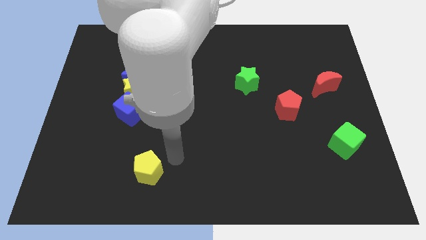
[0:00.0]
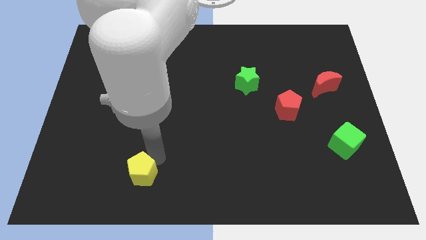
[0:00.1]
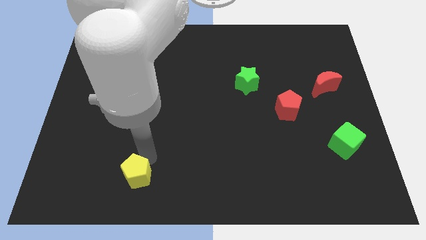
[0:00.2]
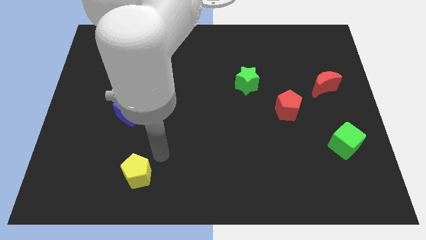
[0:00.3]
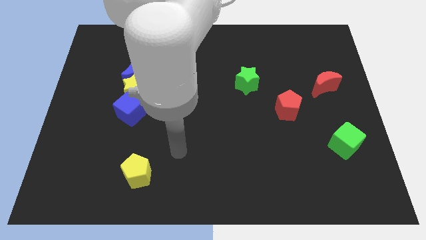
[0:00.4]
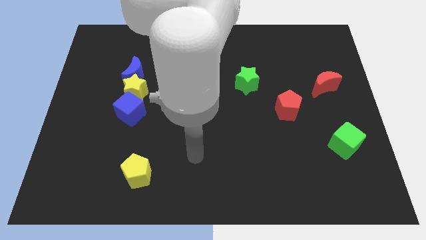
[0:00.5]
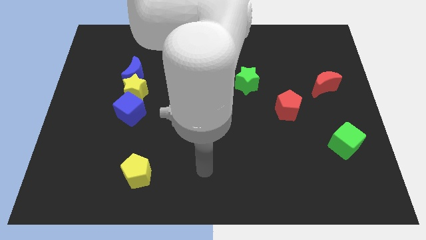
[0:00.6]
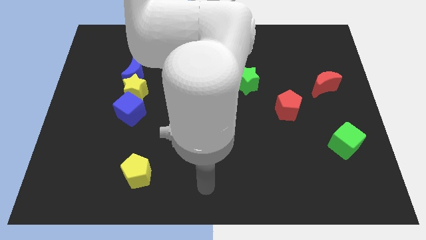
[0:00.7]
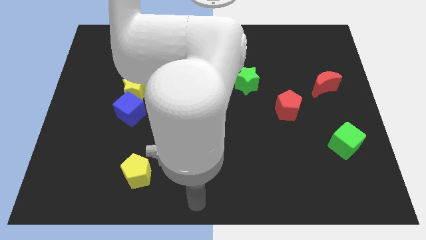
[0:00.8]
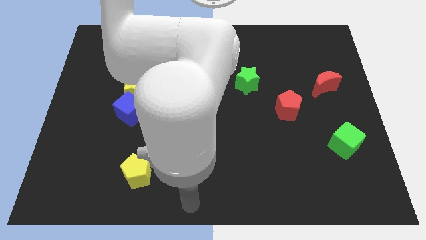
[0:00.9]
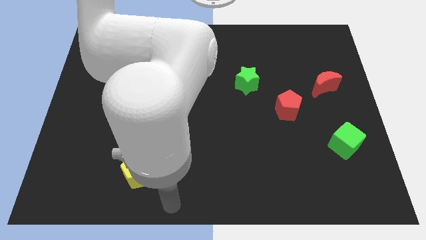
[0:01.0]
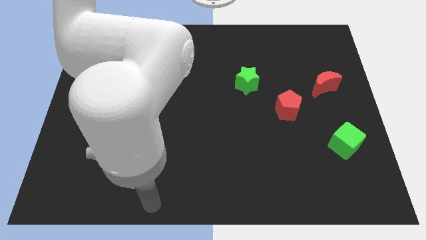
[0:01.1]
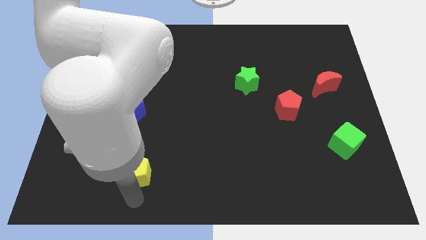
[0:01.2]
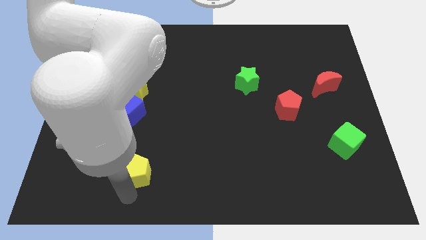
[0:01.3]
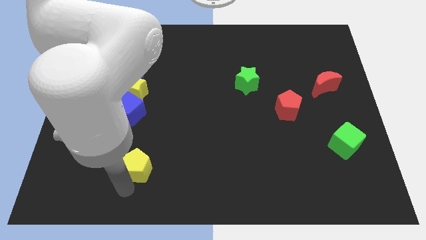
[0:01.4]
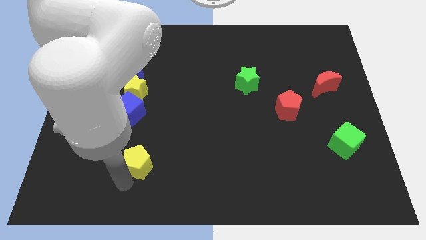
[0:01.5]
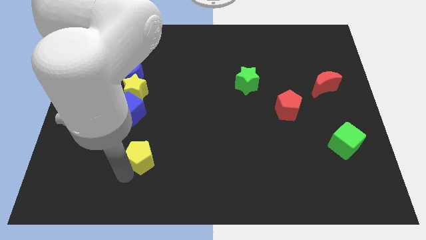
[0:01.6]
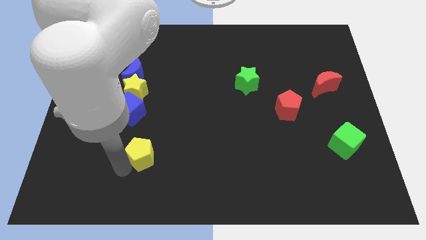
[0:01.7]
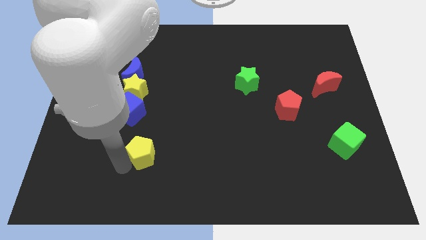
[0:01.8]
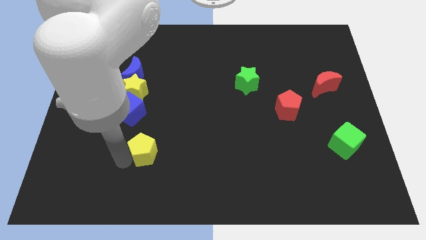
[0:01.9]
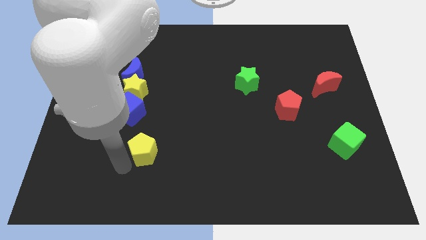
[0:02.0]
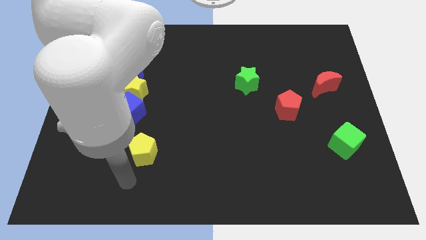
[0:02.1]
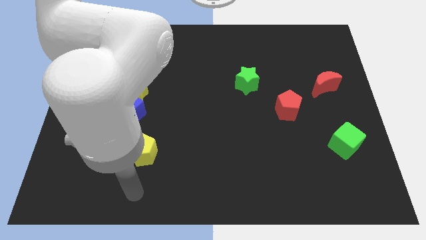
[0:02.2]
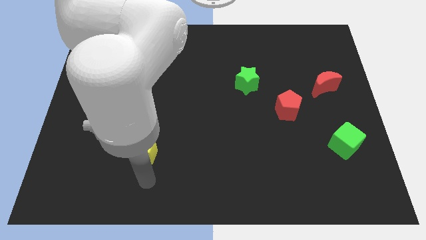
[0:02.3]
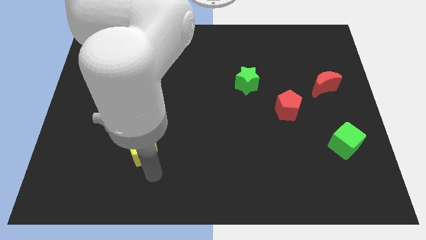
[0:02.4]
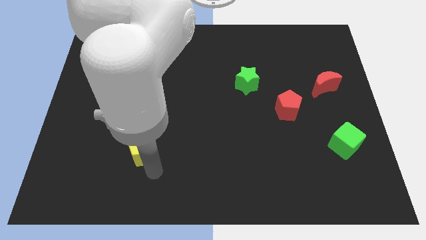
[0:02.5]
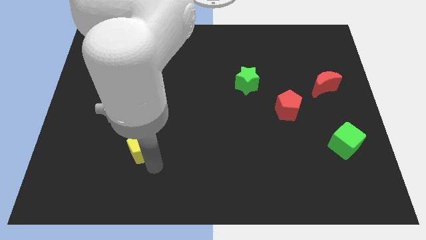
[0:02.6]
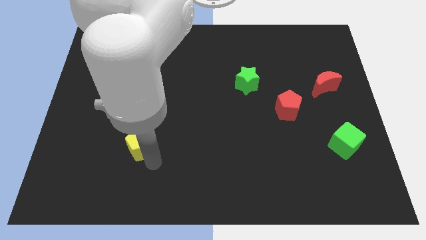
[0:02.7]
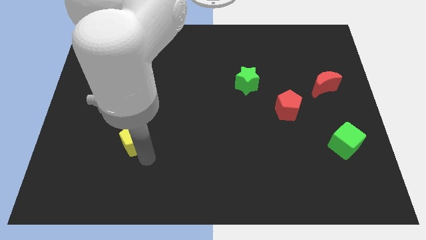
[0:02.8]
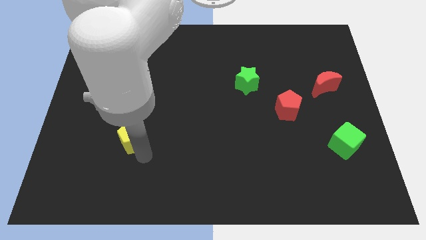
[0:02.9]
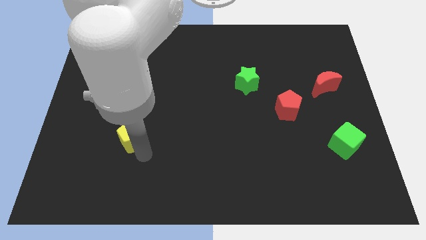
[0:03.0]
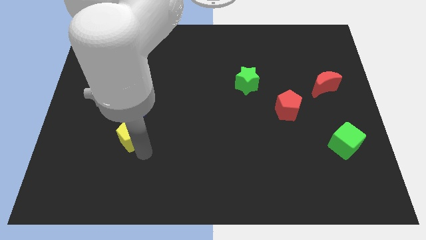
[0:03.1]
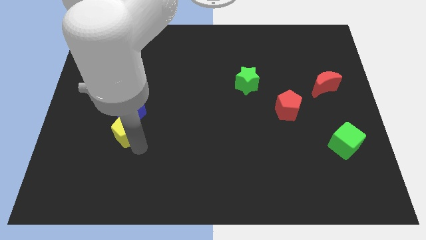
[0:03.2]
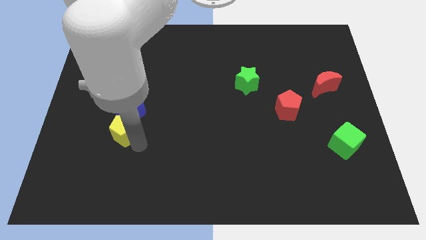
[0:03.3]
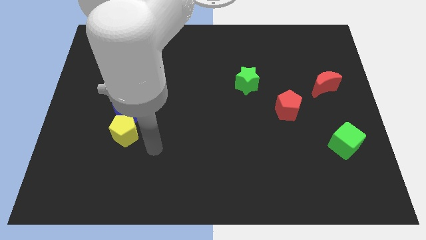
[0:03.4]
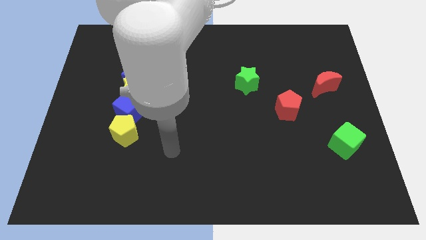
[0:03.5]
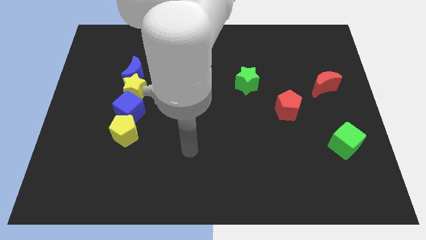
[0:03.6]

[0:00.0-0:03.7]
place the yellow pentagon at the bottom of the blue cube

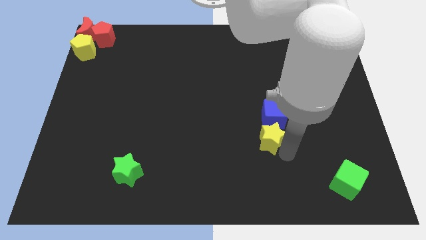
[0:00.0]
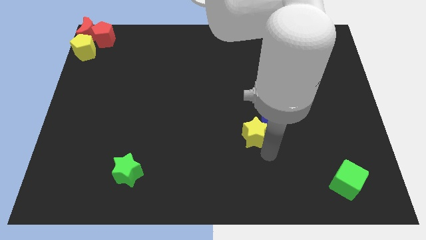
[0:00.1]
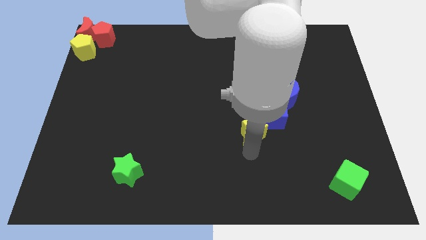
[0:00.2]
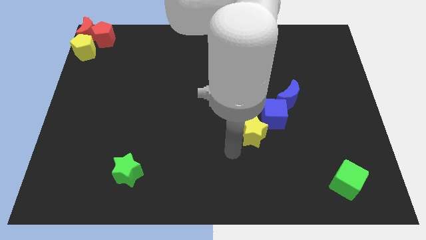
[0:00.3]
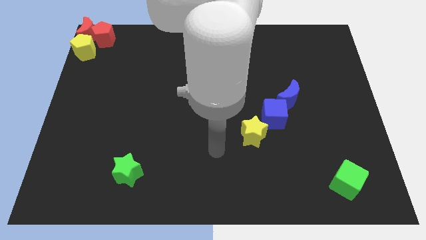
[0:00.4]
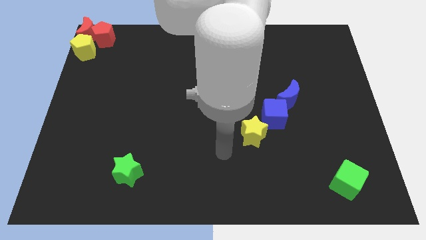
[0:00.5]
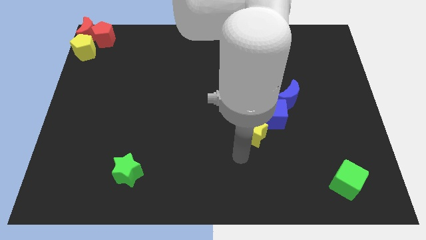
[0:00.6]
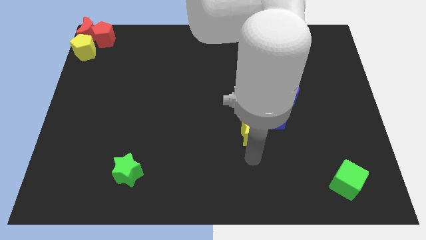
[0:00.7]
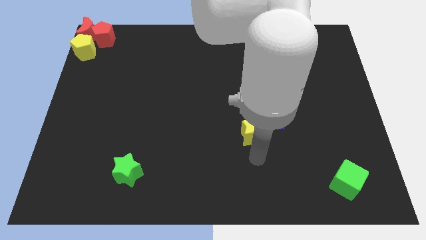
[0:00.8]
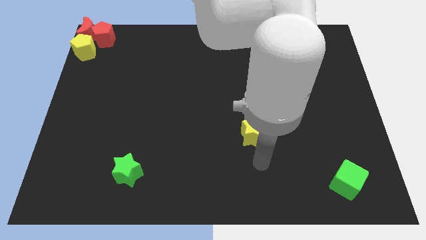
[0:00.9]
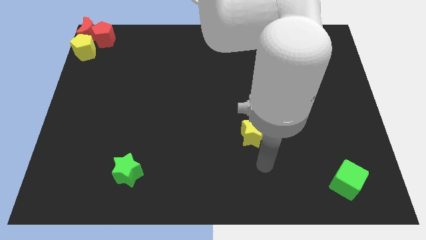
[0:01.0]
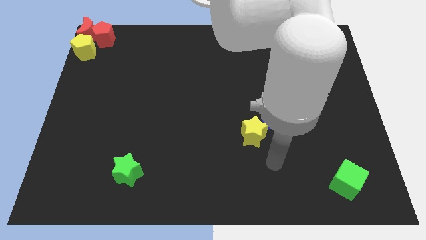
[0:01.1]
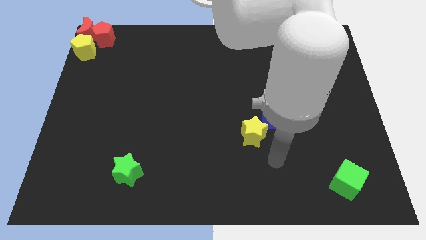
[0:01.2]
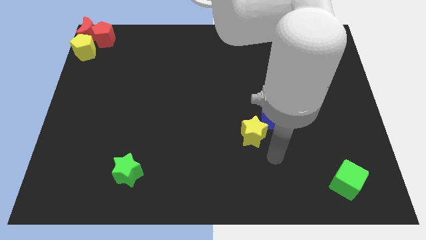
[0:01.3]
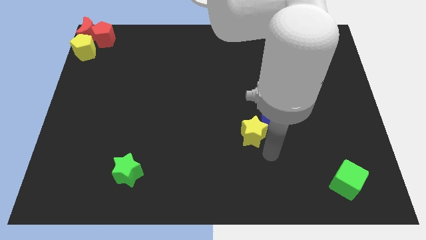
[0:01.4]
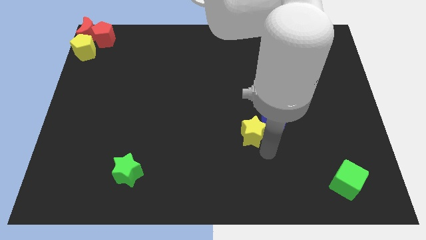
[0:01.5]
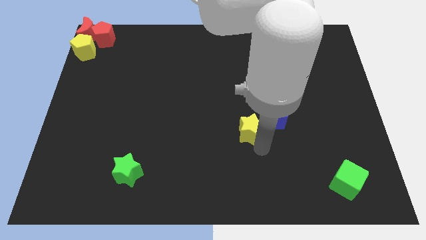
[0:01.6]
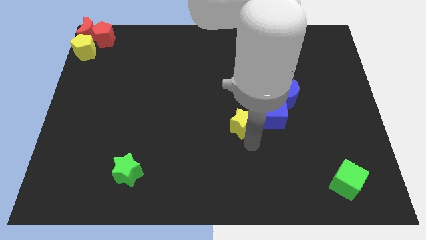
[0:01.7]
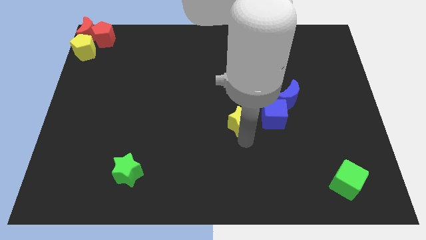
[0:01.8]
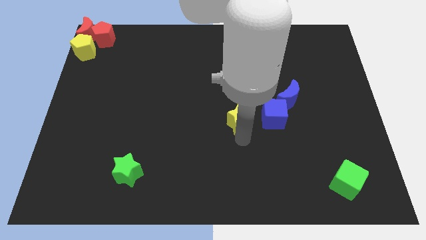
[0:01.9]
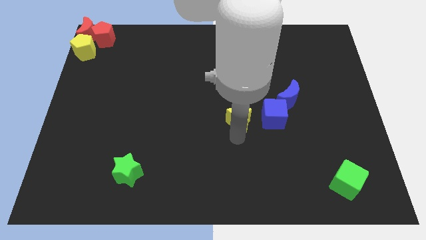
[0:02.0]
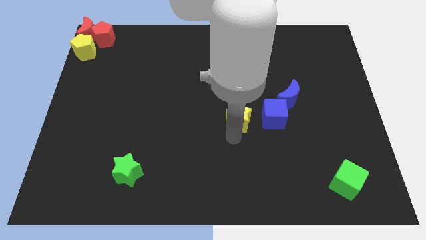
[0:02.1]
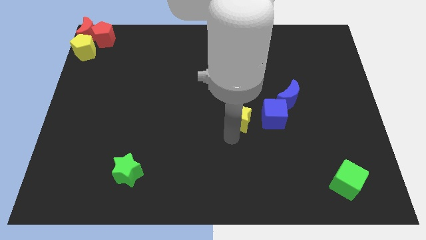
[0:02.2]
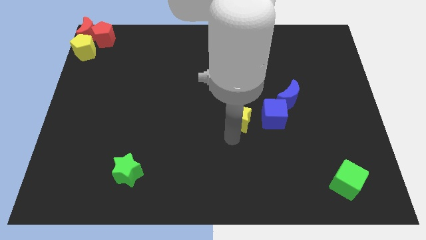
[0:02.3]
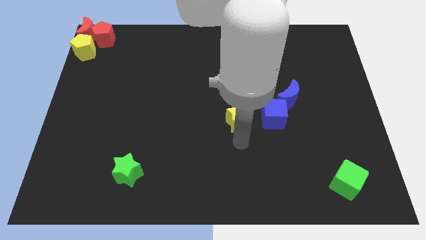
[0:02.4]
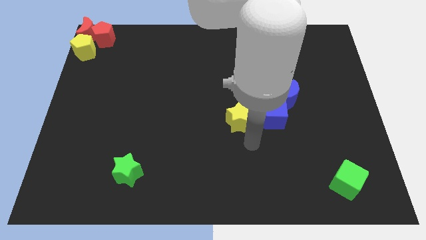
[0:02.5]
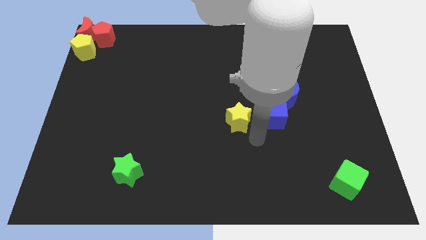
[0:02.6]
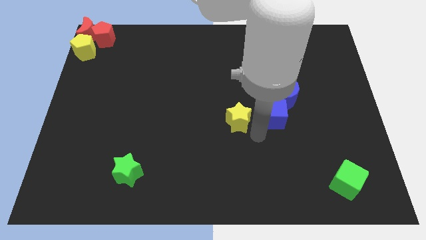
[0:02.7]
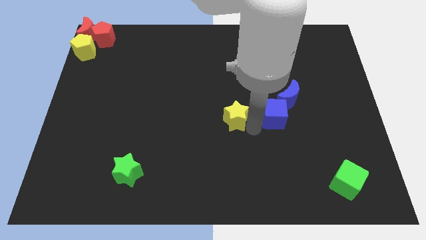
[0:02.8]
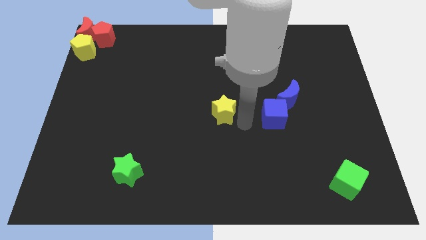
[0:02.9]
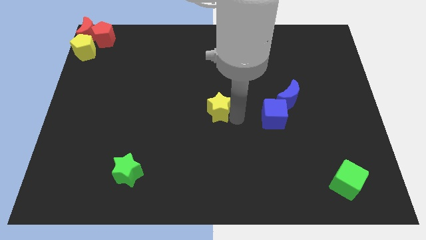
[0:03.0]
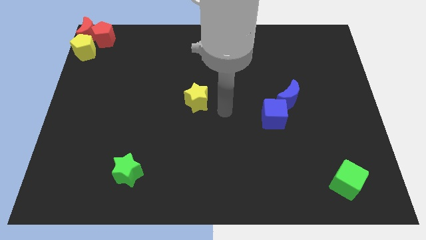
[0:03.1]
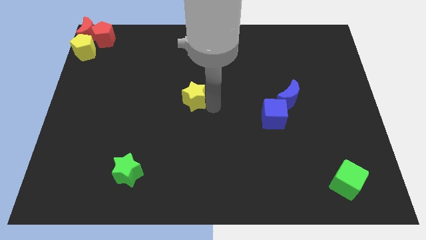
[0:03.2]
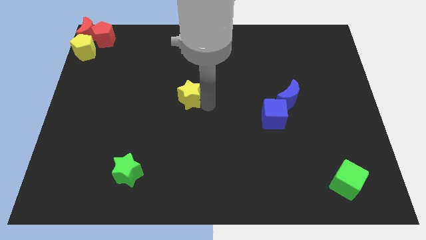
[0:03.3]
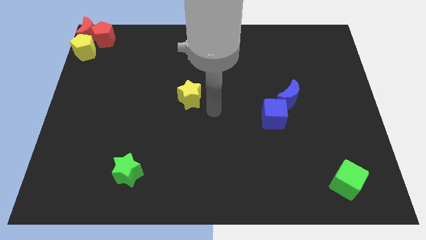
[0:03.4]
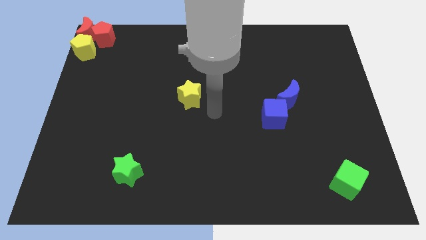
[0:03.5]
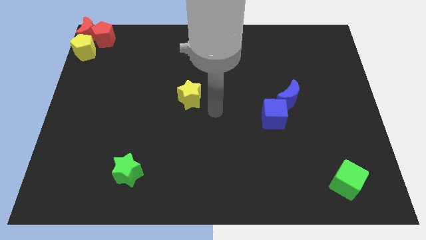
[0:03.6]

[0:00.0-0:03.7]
move the yellow star between blue cube and yellow pentagon

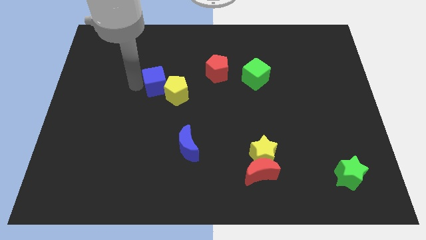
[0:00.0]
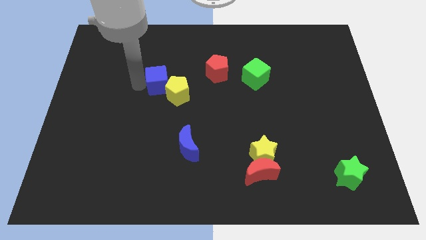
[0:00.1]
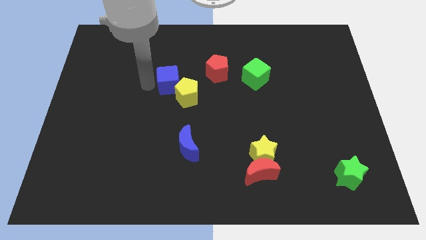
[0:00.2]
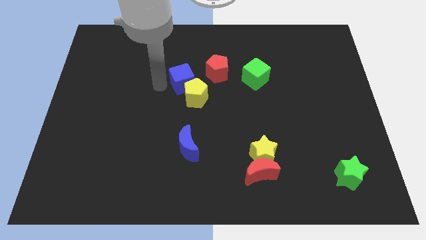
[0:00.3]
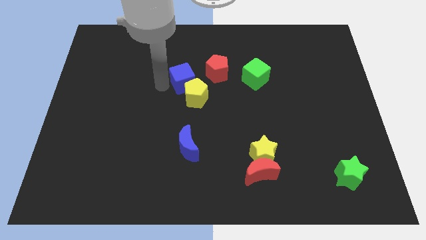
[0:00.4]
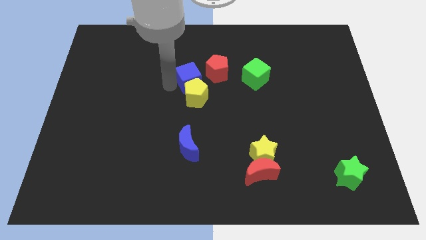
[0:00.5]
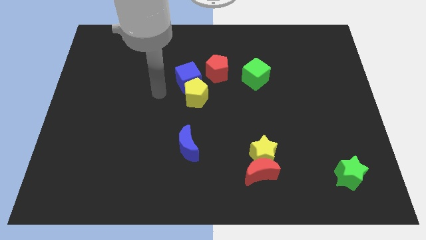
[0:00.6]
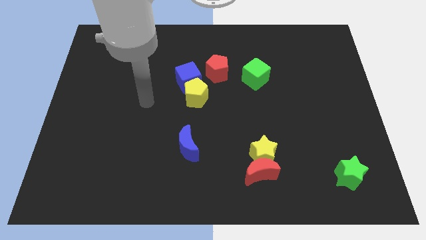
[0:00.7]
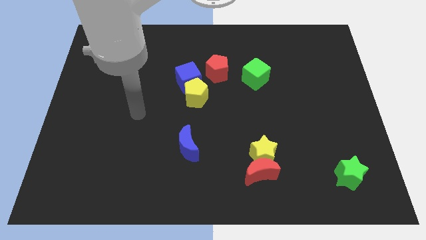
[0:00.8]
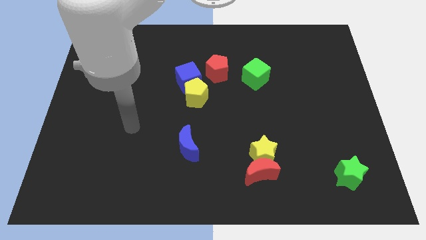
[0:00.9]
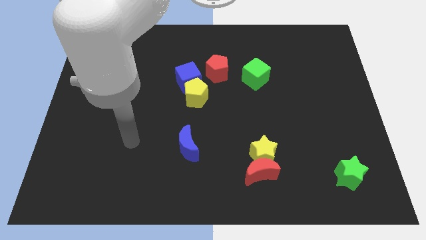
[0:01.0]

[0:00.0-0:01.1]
slightly move the blue cube towards the red pentagon

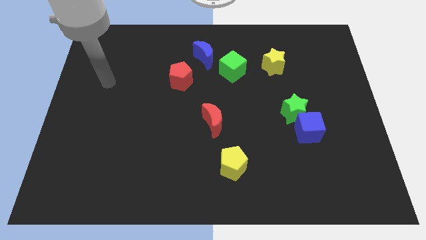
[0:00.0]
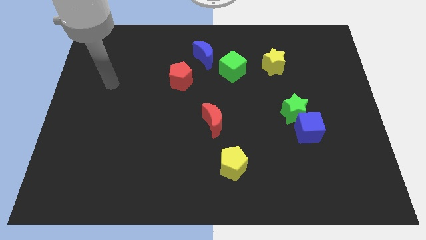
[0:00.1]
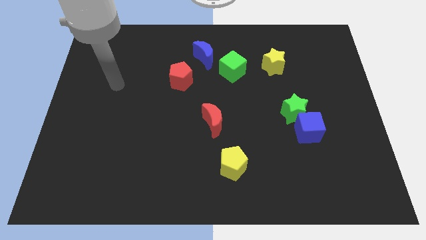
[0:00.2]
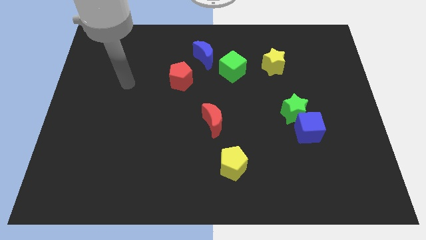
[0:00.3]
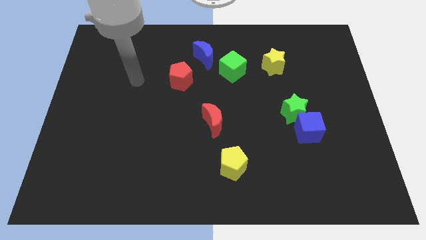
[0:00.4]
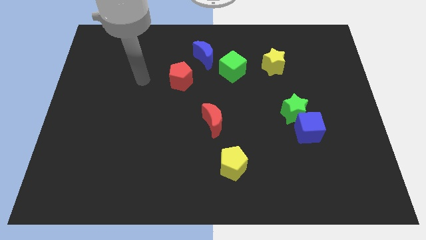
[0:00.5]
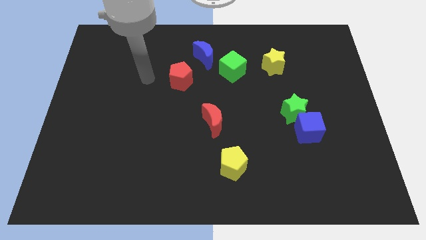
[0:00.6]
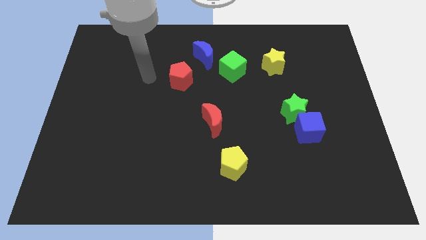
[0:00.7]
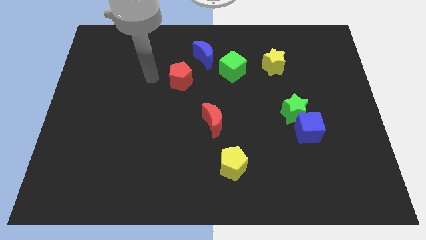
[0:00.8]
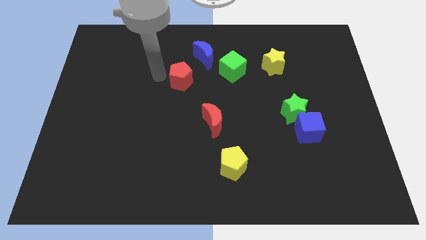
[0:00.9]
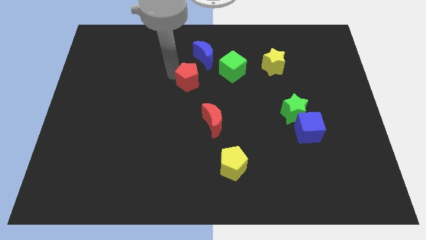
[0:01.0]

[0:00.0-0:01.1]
touch the red pentagon
